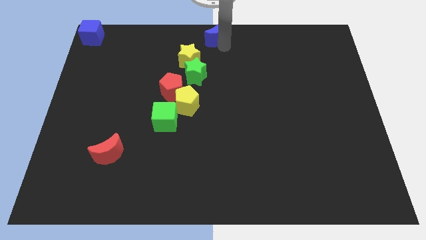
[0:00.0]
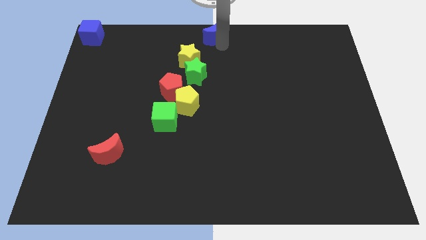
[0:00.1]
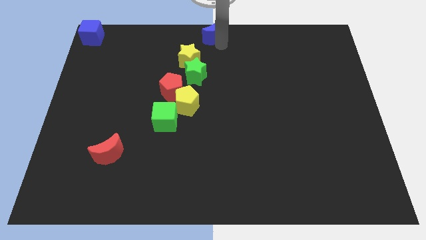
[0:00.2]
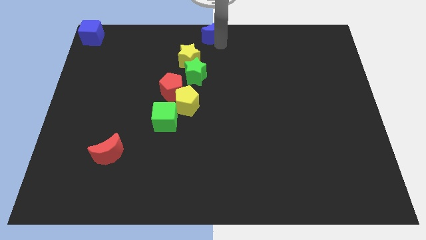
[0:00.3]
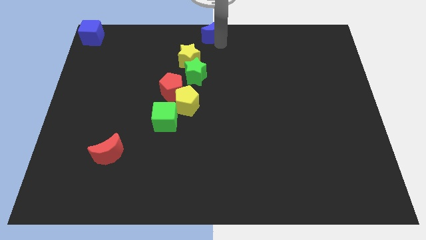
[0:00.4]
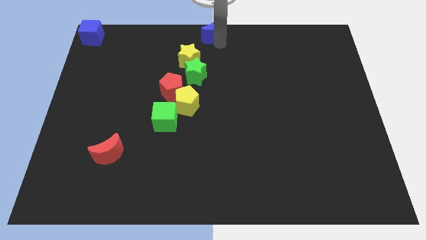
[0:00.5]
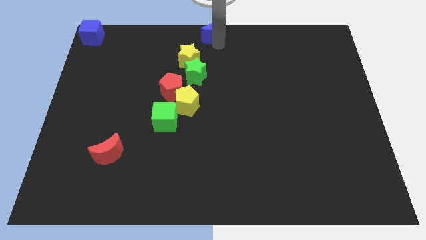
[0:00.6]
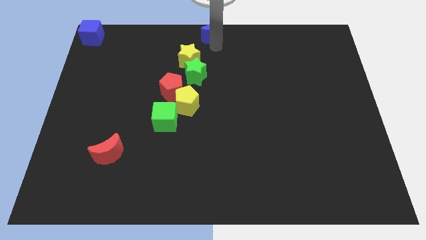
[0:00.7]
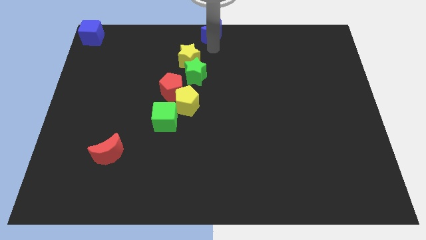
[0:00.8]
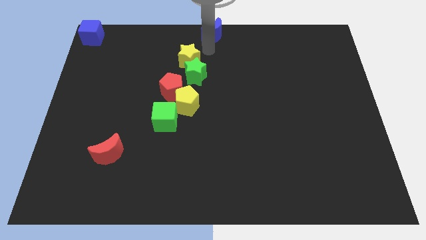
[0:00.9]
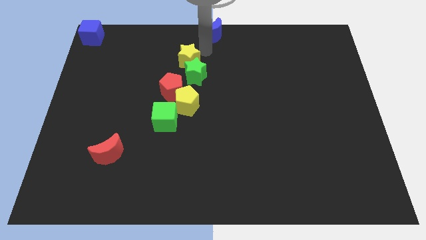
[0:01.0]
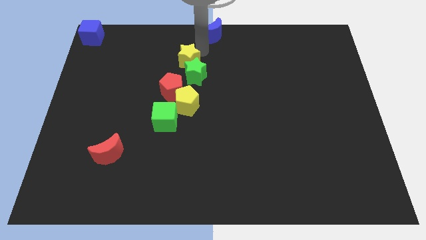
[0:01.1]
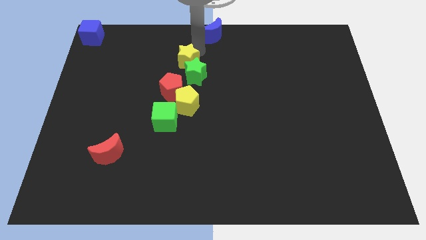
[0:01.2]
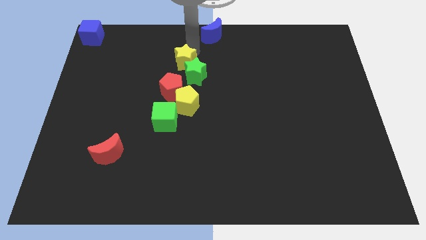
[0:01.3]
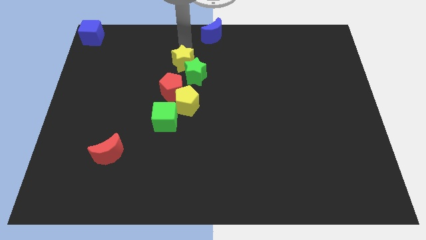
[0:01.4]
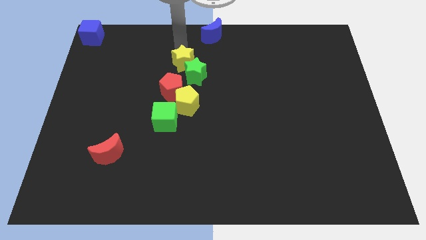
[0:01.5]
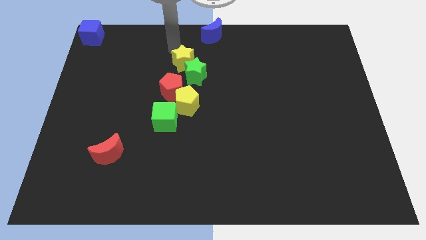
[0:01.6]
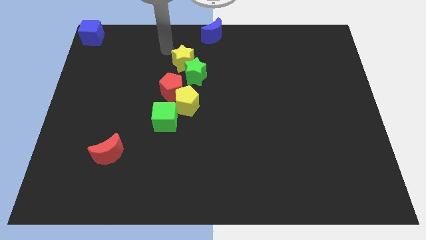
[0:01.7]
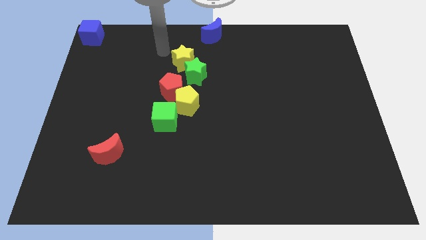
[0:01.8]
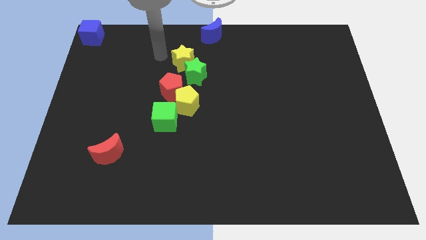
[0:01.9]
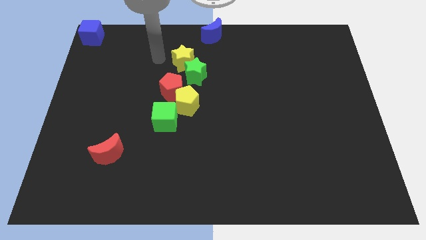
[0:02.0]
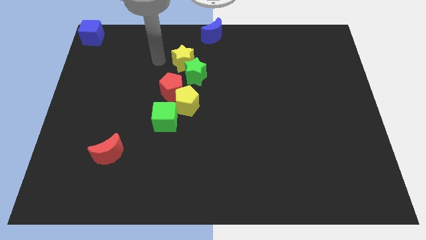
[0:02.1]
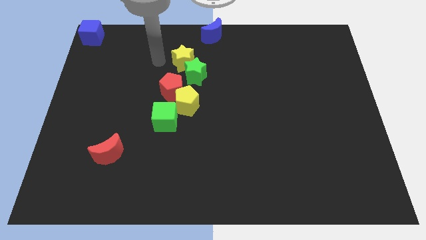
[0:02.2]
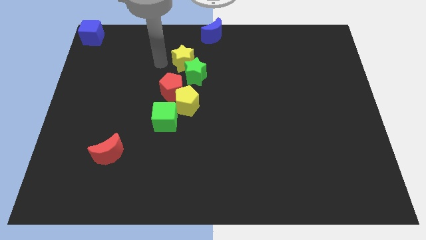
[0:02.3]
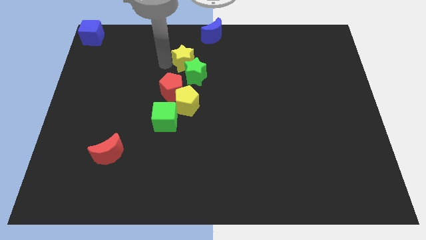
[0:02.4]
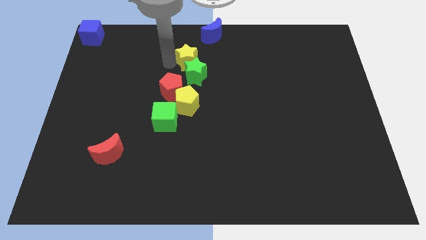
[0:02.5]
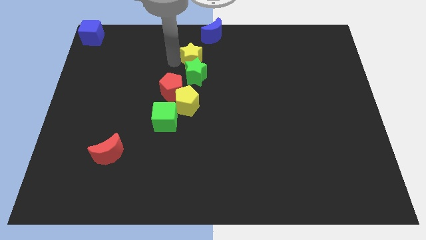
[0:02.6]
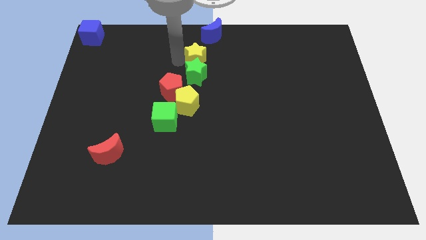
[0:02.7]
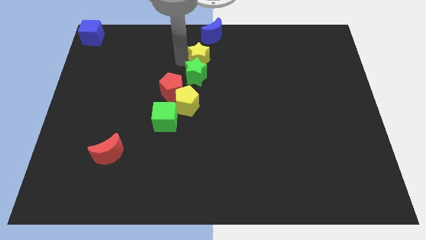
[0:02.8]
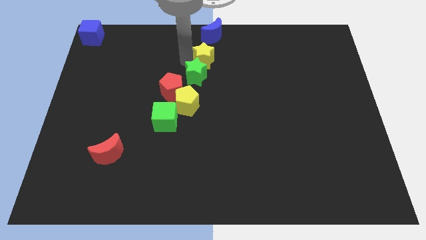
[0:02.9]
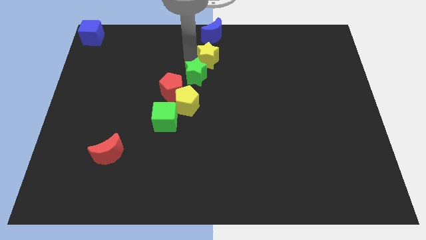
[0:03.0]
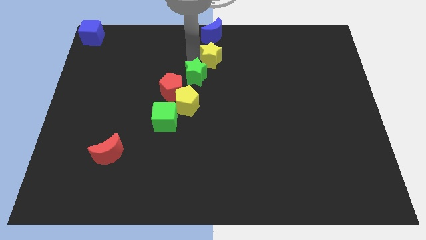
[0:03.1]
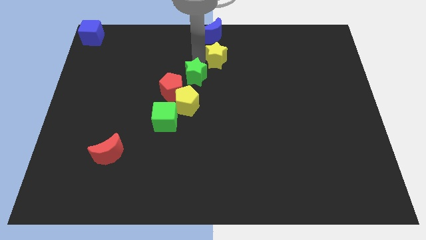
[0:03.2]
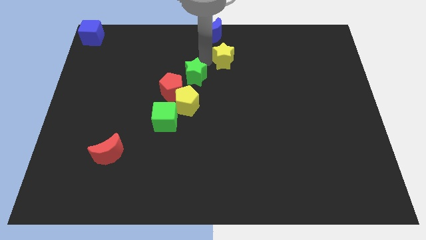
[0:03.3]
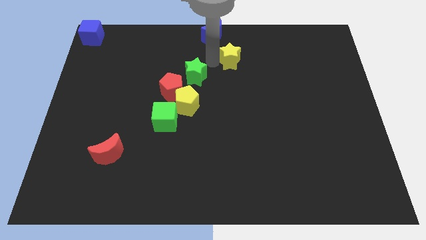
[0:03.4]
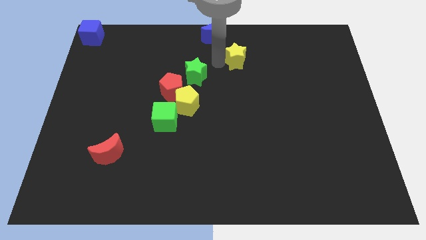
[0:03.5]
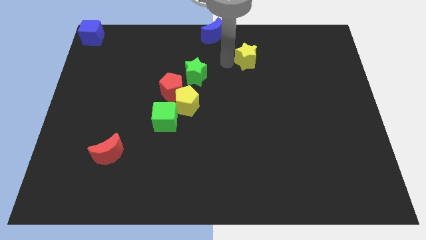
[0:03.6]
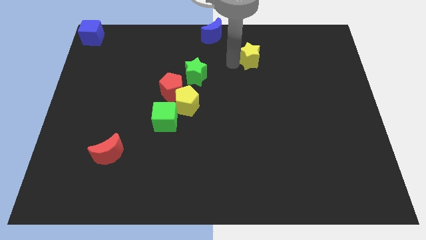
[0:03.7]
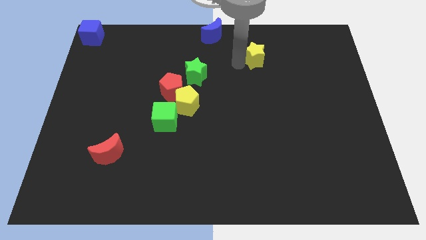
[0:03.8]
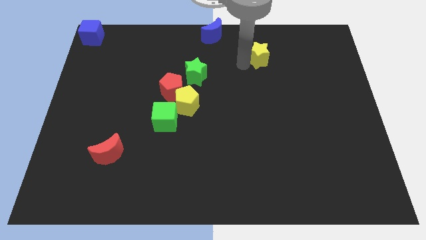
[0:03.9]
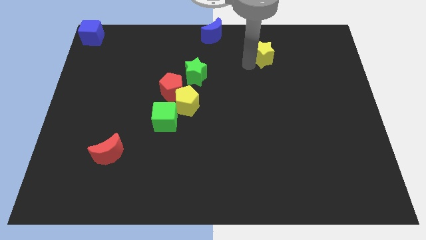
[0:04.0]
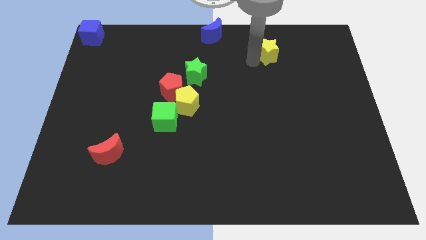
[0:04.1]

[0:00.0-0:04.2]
push the yellow star slightly towards the right side

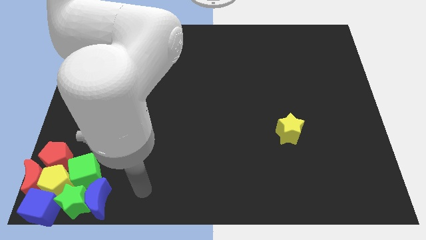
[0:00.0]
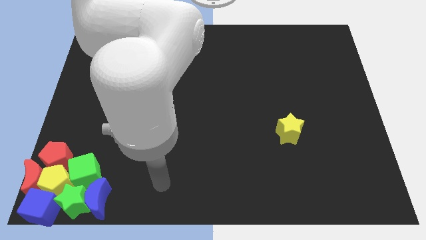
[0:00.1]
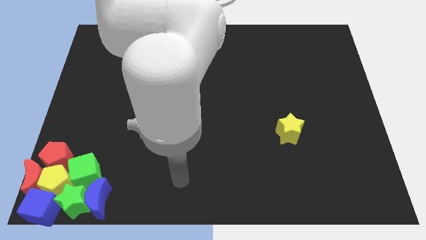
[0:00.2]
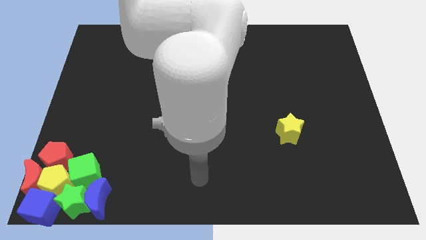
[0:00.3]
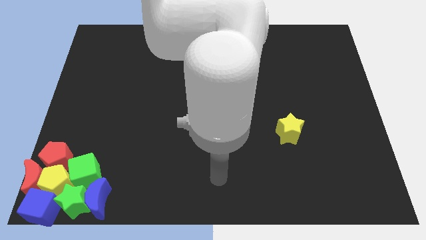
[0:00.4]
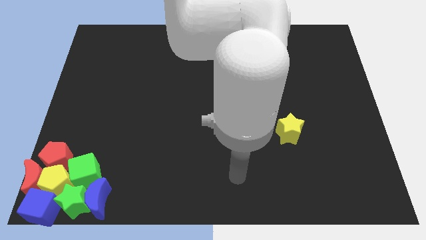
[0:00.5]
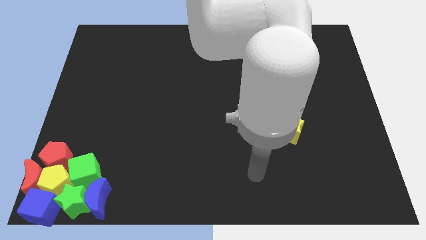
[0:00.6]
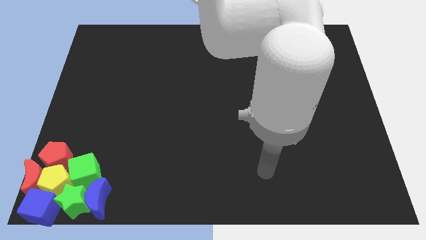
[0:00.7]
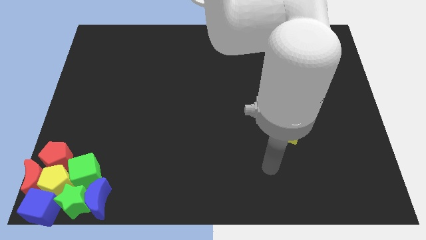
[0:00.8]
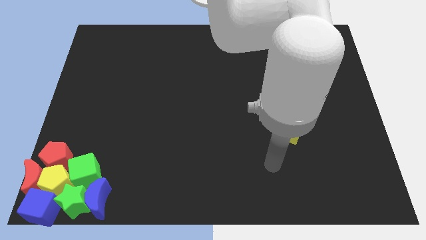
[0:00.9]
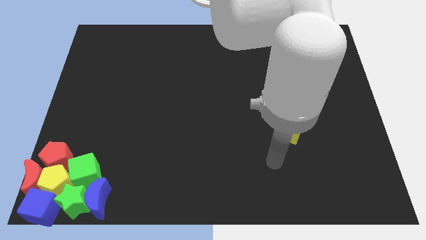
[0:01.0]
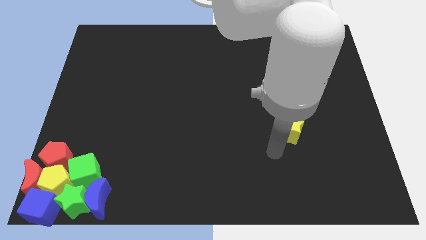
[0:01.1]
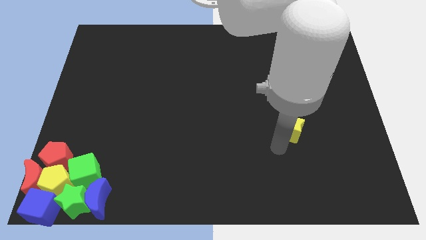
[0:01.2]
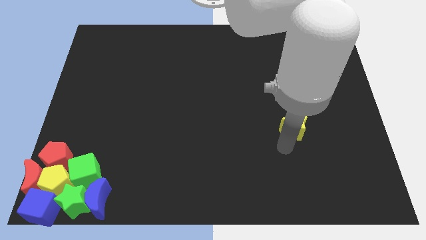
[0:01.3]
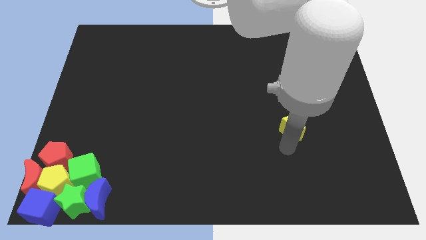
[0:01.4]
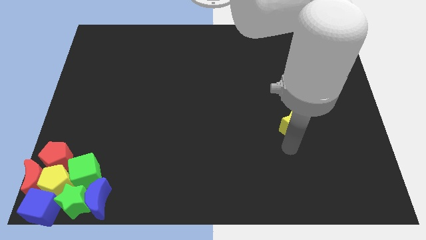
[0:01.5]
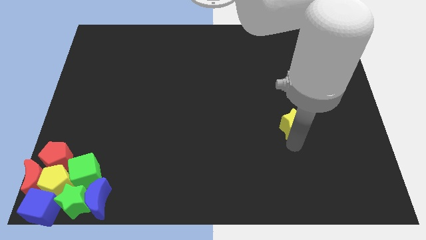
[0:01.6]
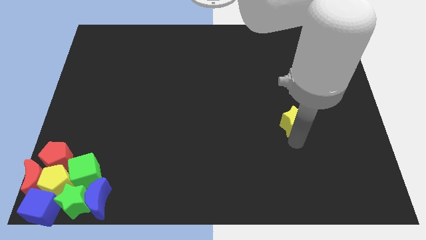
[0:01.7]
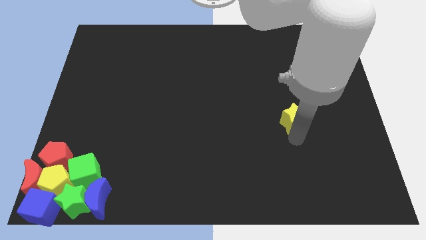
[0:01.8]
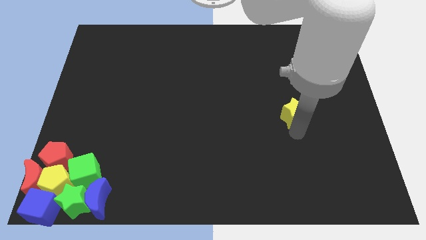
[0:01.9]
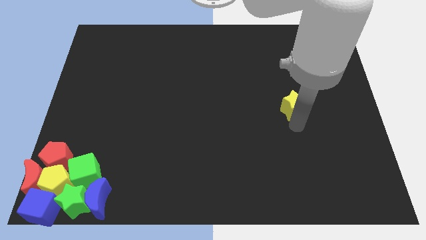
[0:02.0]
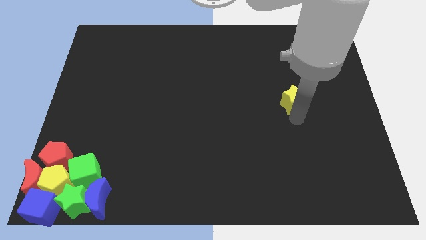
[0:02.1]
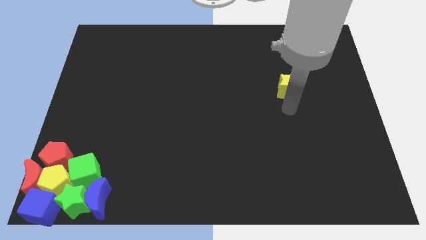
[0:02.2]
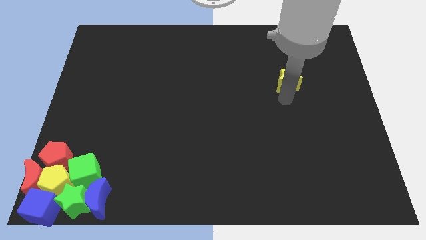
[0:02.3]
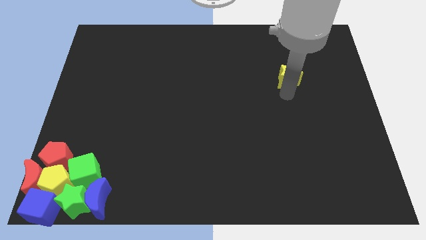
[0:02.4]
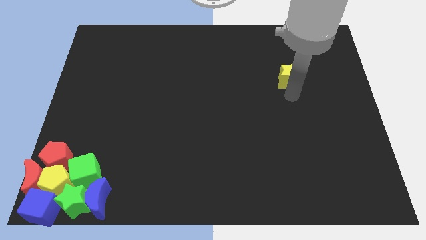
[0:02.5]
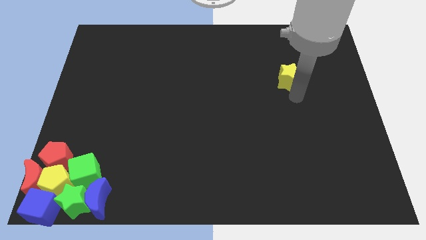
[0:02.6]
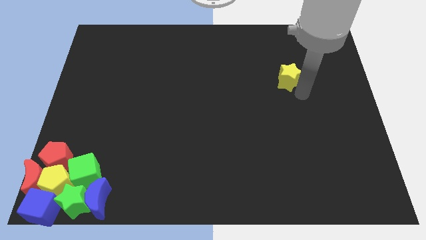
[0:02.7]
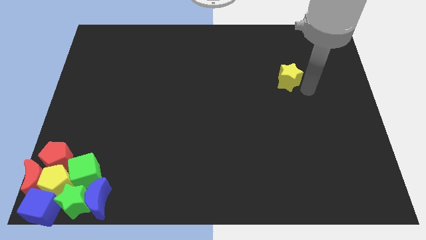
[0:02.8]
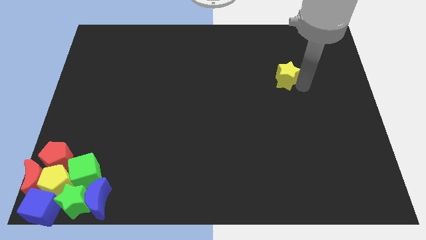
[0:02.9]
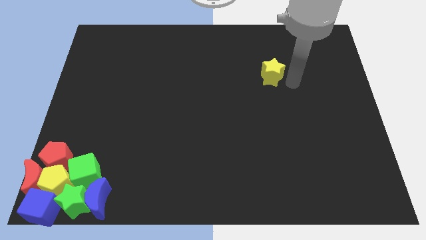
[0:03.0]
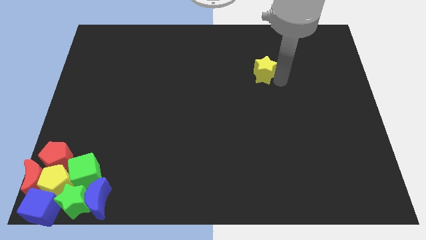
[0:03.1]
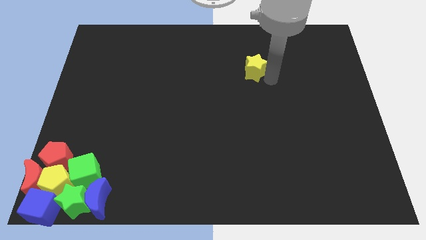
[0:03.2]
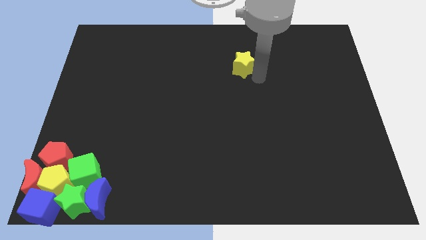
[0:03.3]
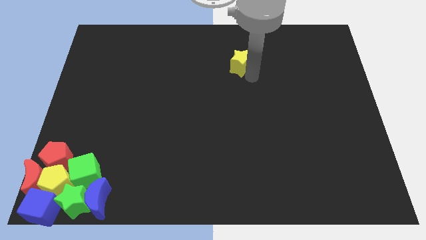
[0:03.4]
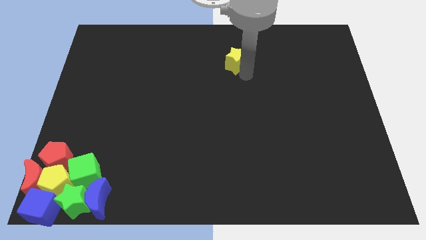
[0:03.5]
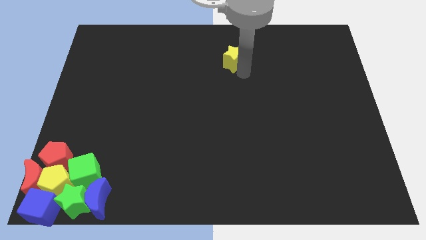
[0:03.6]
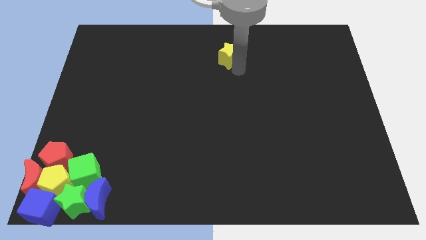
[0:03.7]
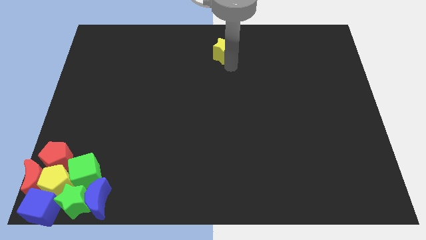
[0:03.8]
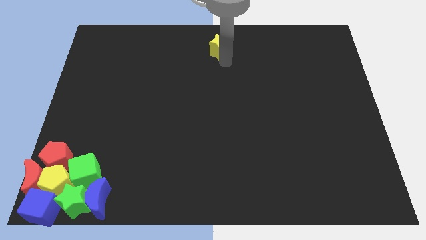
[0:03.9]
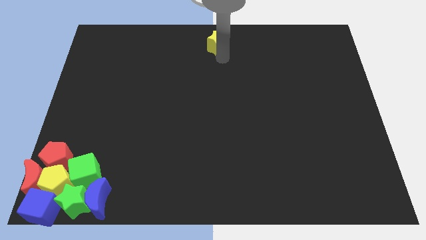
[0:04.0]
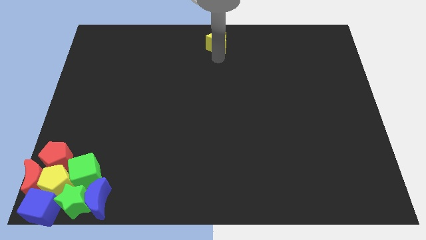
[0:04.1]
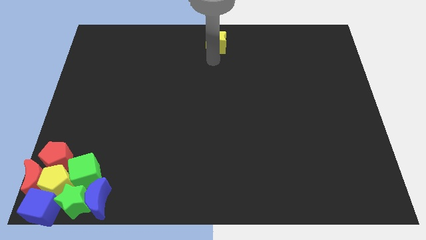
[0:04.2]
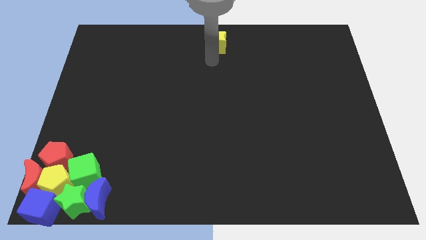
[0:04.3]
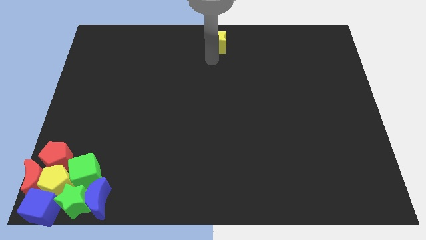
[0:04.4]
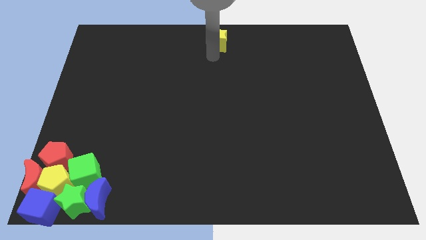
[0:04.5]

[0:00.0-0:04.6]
move the yellow star to the top of the board

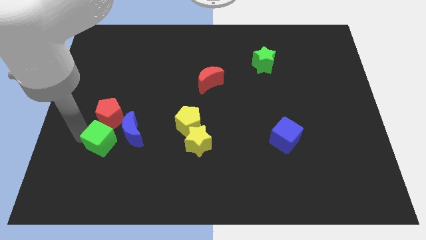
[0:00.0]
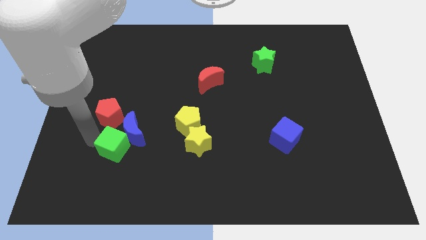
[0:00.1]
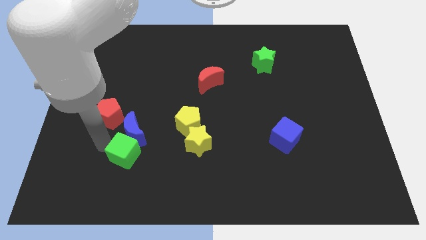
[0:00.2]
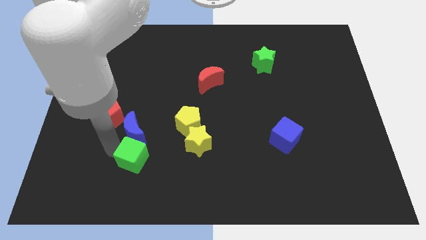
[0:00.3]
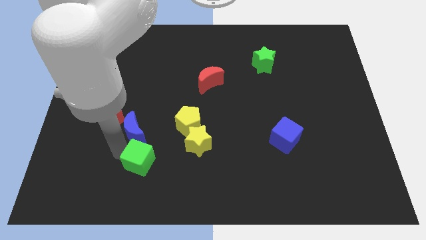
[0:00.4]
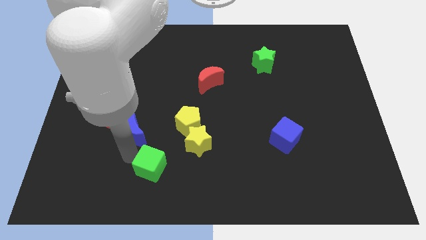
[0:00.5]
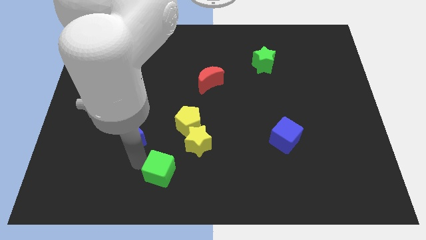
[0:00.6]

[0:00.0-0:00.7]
move green cube below to the blue crescent
